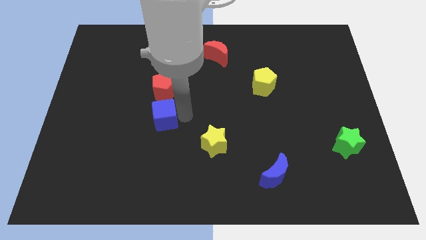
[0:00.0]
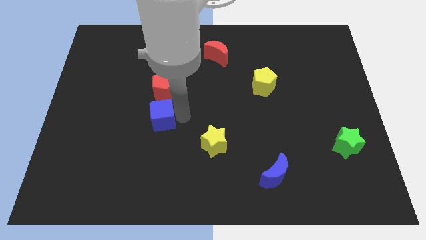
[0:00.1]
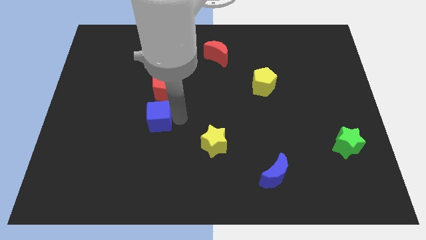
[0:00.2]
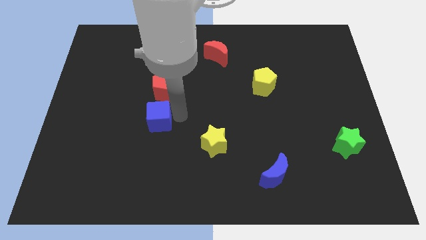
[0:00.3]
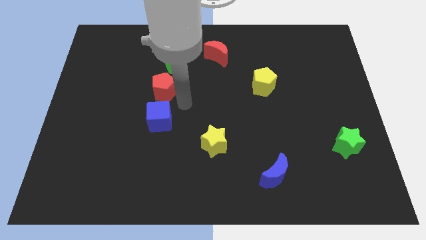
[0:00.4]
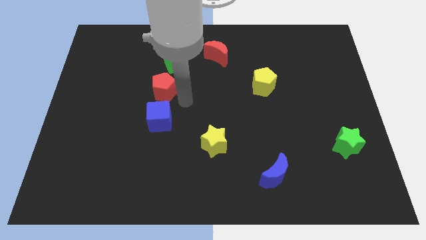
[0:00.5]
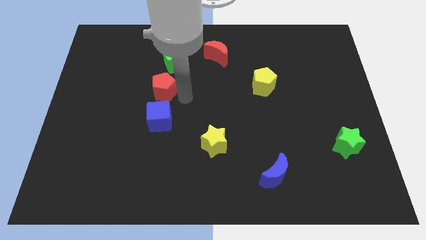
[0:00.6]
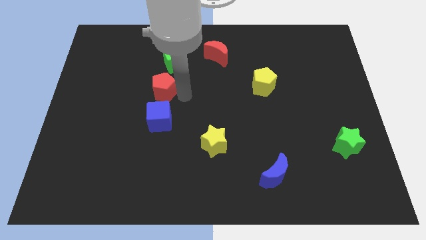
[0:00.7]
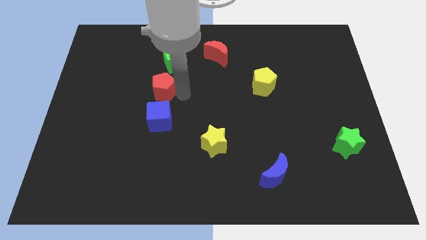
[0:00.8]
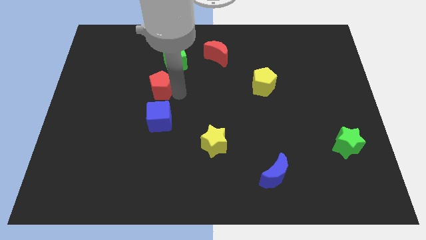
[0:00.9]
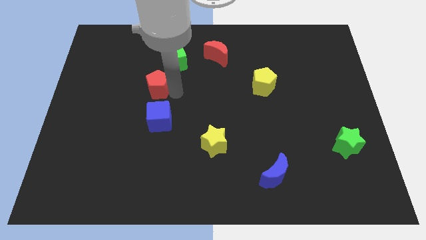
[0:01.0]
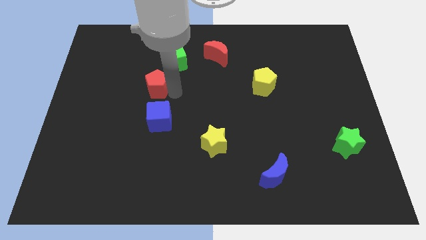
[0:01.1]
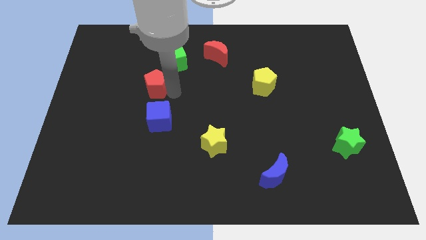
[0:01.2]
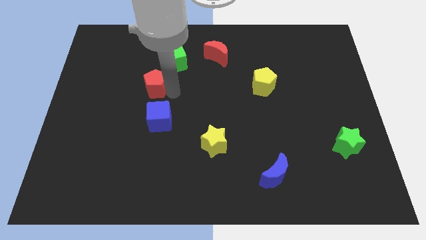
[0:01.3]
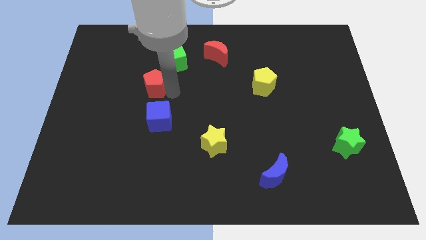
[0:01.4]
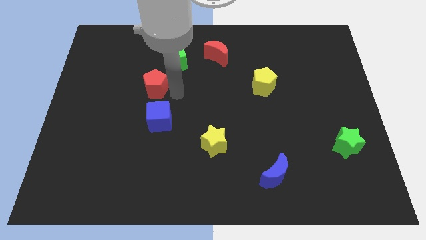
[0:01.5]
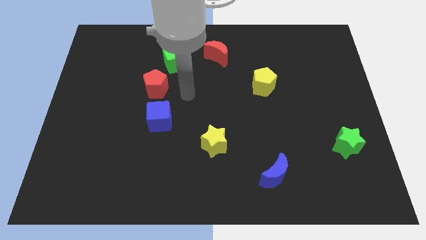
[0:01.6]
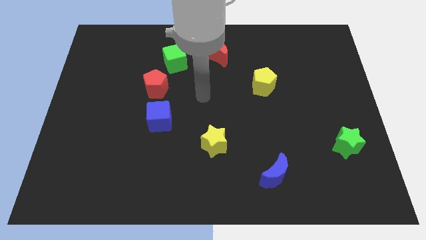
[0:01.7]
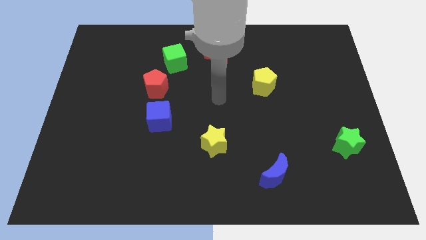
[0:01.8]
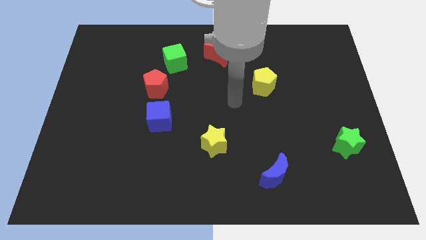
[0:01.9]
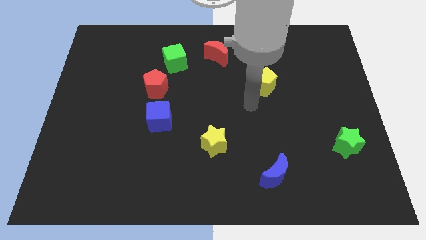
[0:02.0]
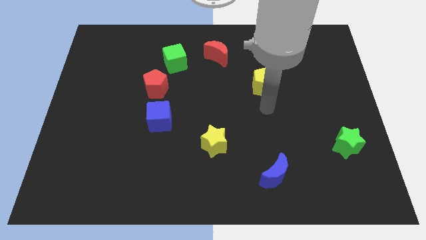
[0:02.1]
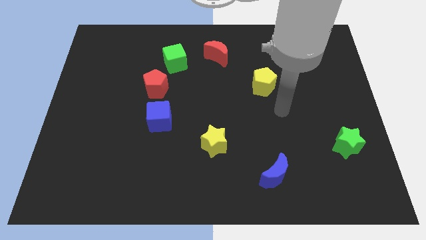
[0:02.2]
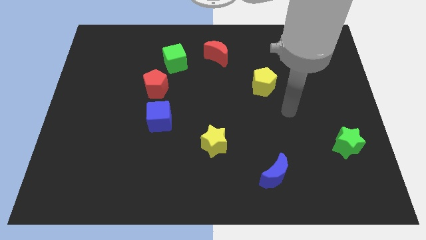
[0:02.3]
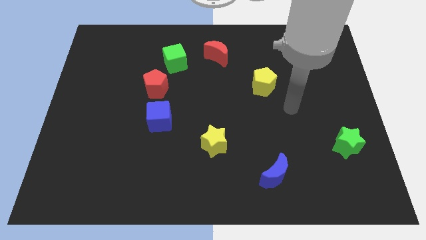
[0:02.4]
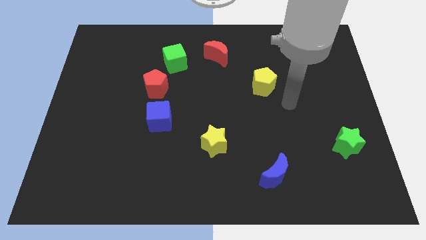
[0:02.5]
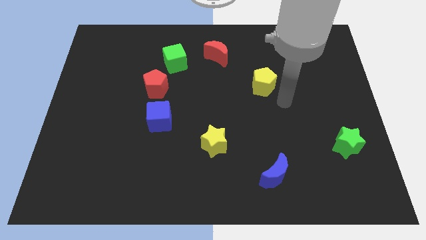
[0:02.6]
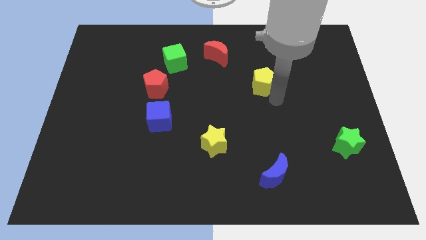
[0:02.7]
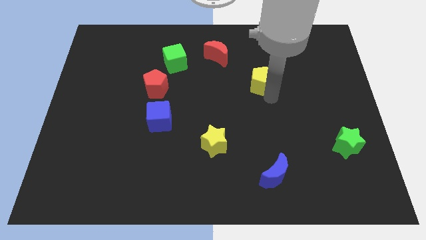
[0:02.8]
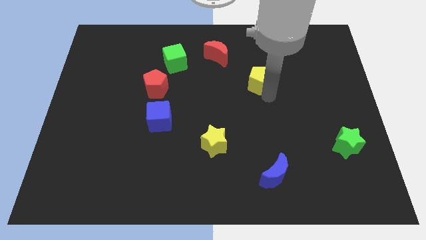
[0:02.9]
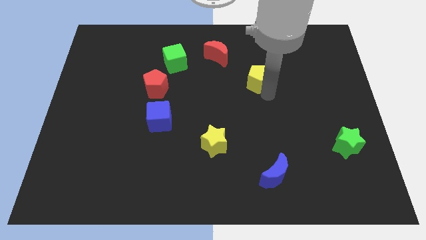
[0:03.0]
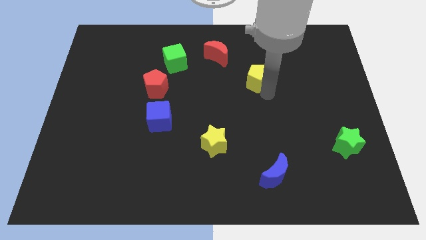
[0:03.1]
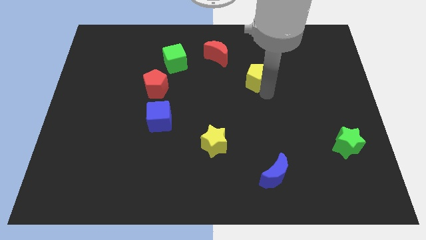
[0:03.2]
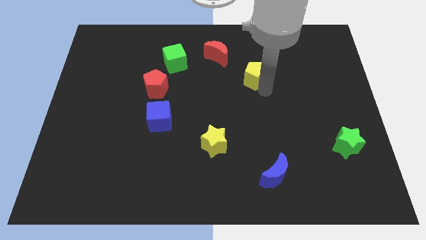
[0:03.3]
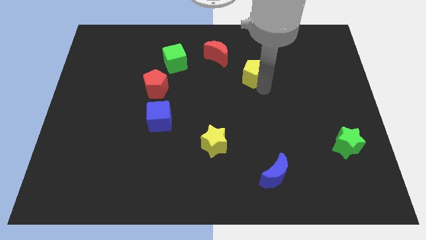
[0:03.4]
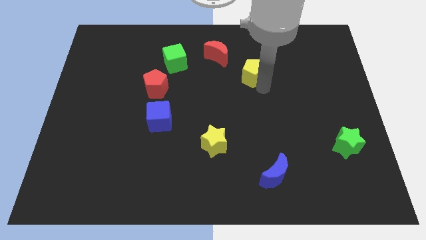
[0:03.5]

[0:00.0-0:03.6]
push the yellow pentagon towards the bottom of the red moon

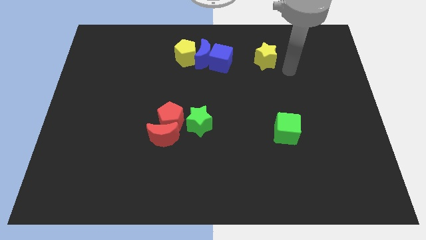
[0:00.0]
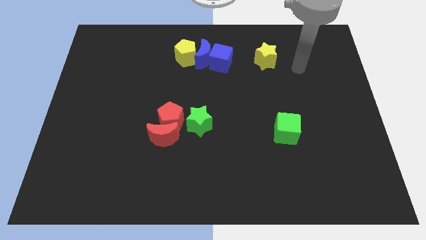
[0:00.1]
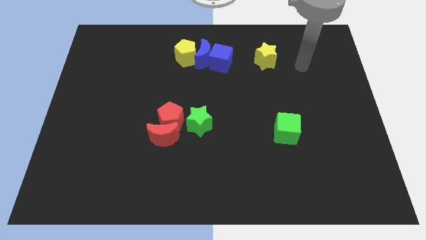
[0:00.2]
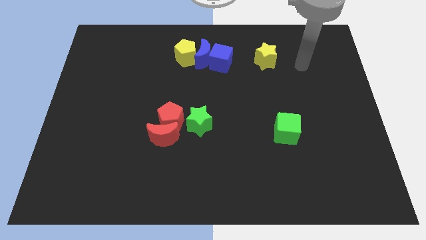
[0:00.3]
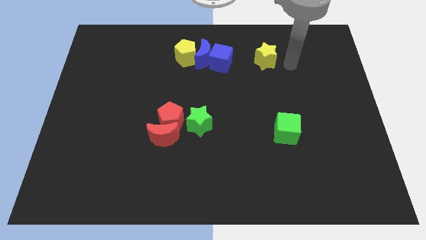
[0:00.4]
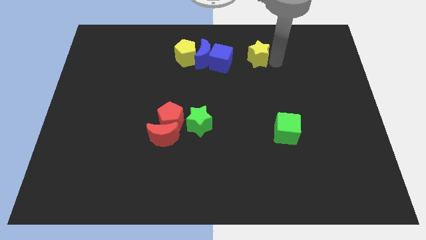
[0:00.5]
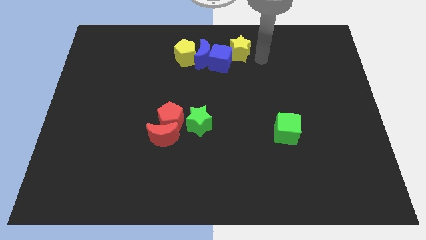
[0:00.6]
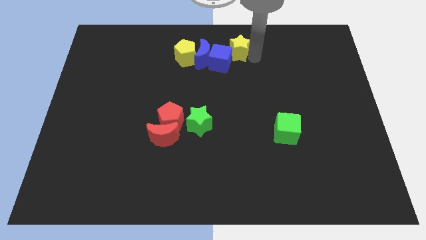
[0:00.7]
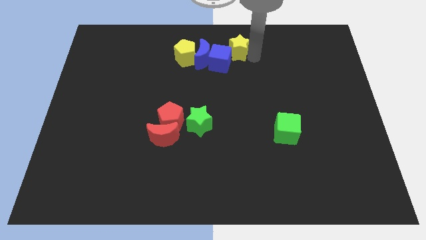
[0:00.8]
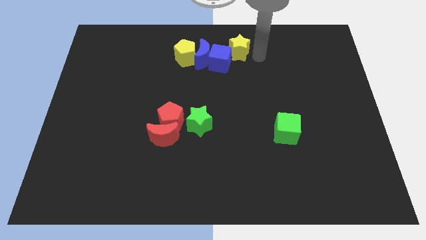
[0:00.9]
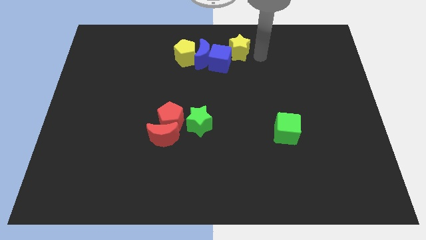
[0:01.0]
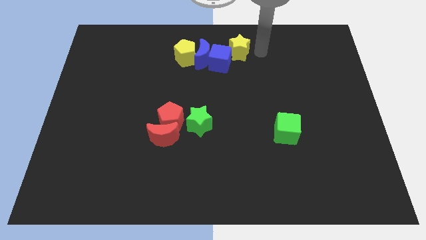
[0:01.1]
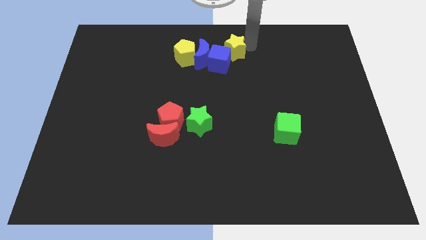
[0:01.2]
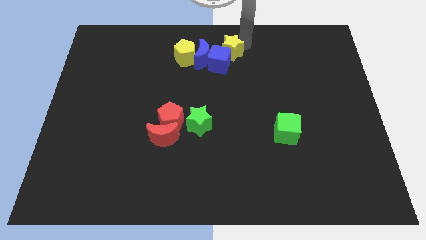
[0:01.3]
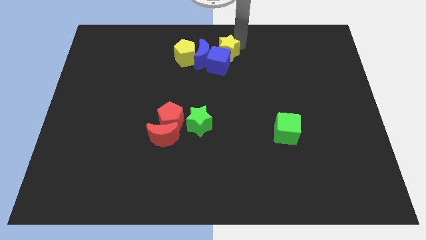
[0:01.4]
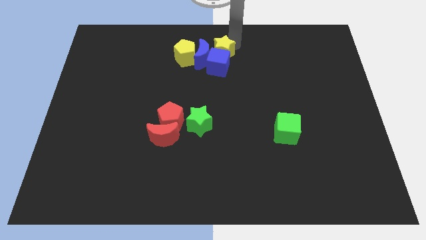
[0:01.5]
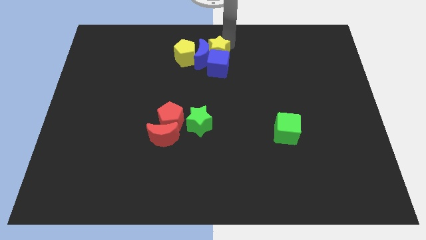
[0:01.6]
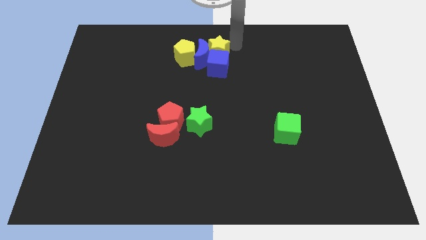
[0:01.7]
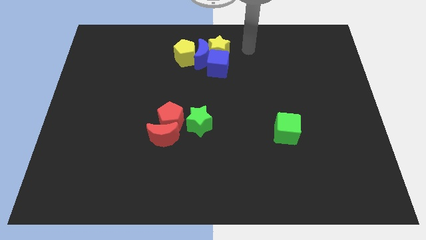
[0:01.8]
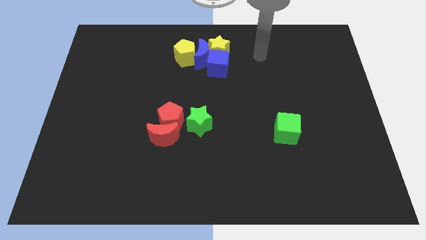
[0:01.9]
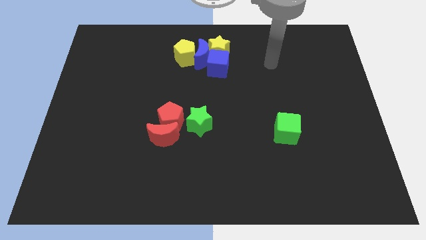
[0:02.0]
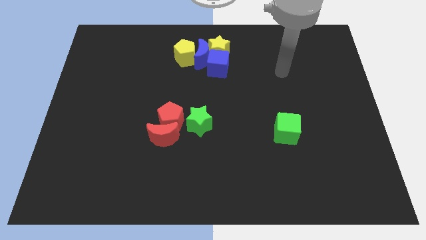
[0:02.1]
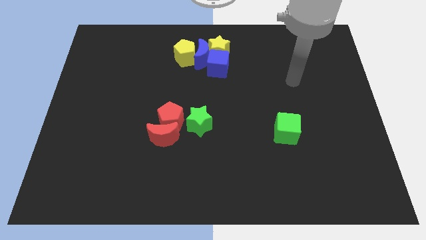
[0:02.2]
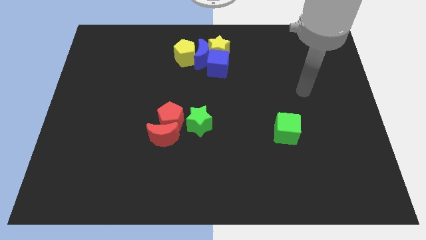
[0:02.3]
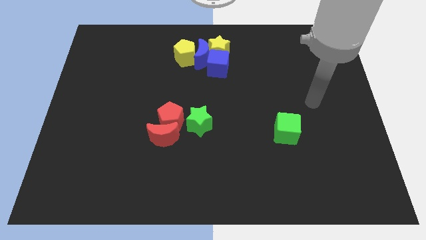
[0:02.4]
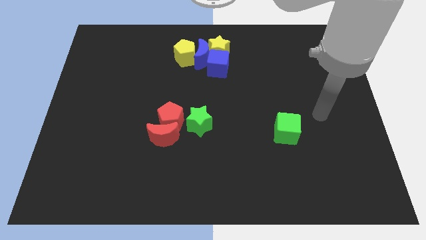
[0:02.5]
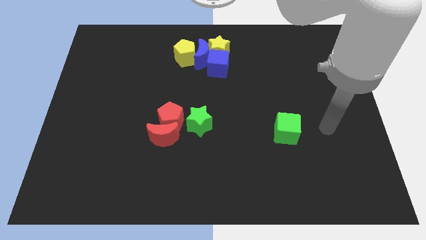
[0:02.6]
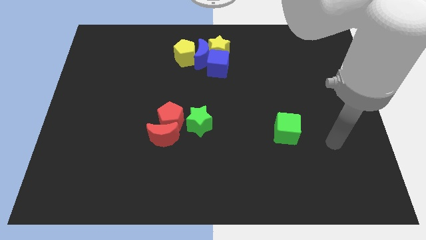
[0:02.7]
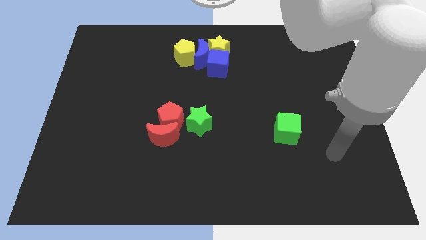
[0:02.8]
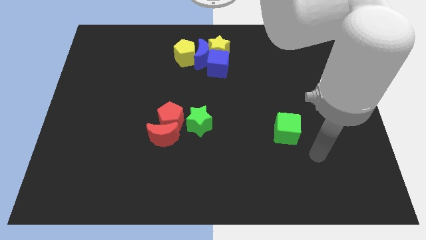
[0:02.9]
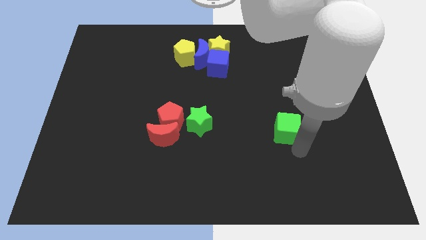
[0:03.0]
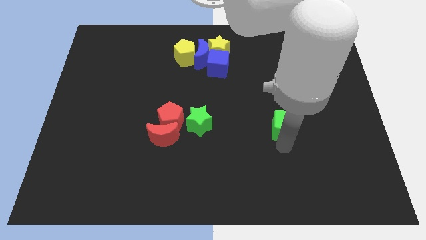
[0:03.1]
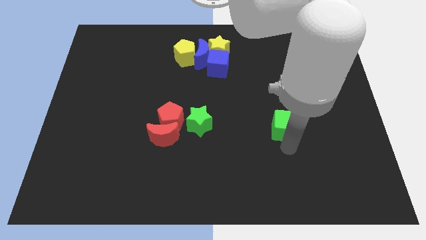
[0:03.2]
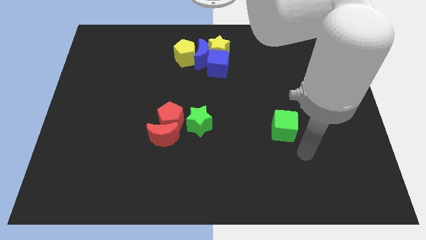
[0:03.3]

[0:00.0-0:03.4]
push the yellow star into the blue blocks

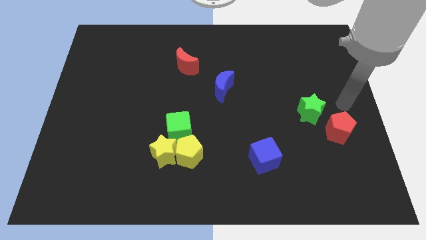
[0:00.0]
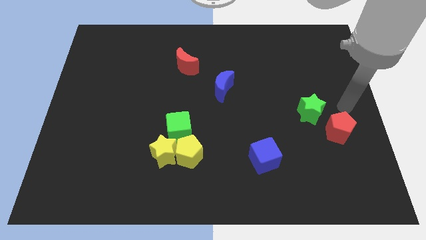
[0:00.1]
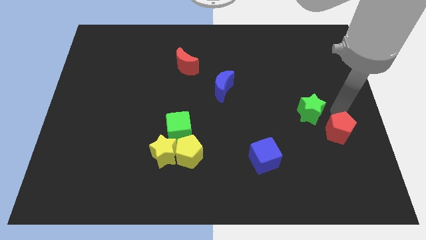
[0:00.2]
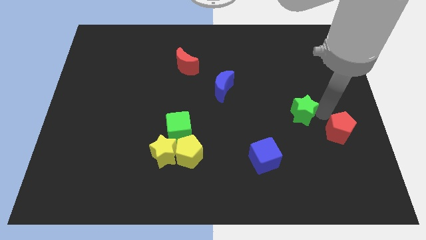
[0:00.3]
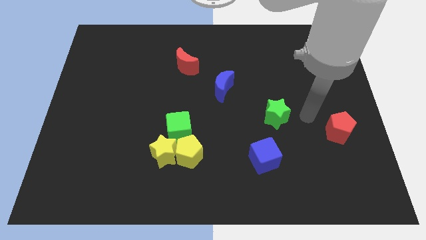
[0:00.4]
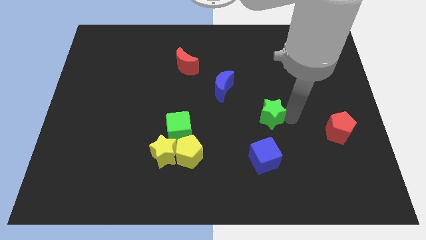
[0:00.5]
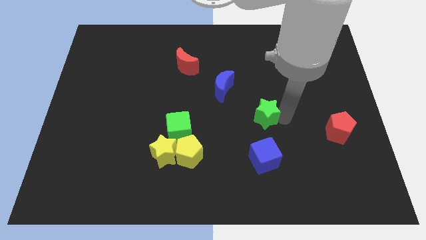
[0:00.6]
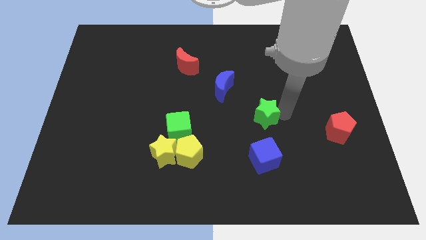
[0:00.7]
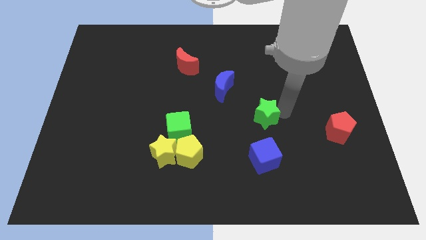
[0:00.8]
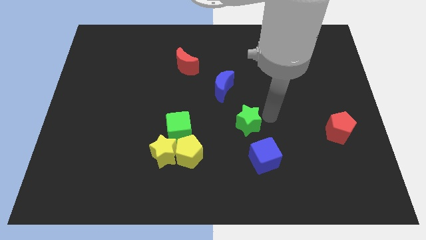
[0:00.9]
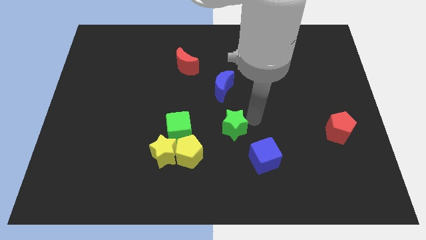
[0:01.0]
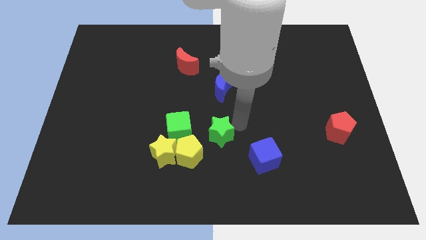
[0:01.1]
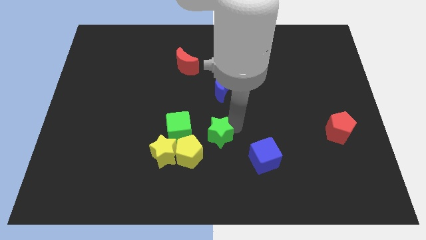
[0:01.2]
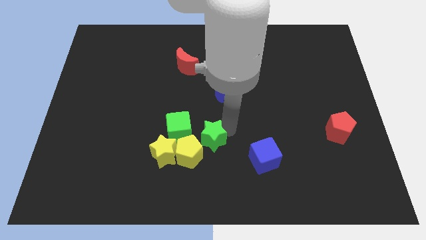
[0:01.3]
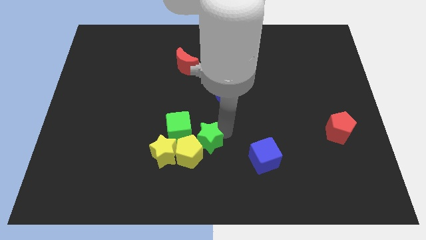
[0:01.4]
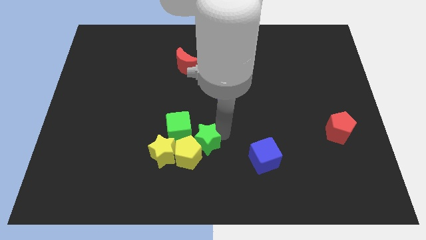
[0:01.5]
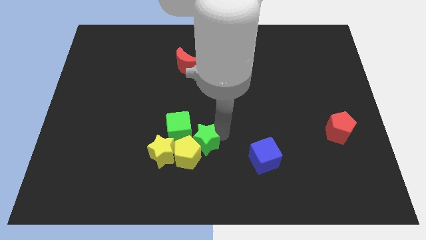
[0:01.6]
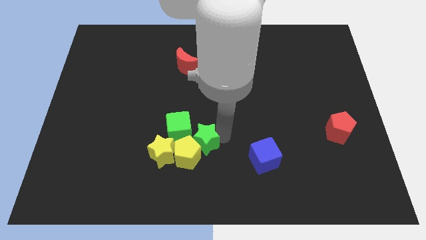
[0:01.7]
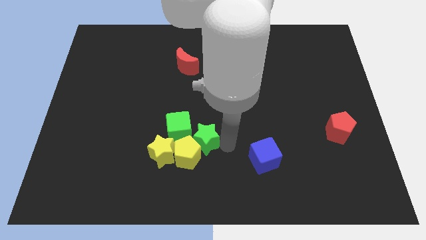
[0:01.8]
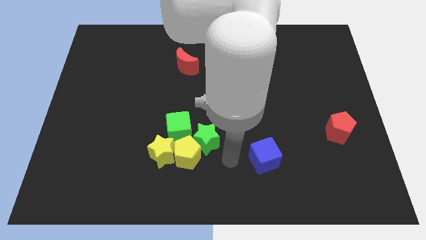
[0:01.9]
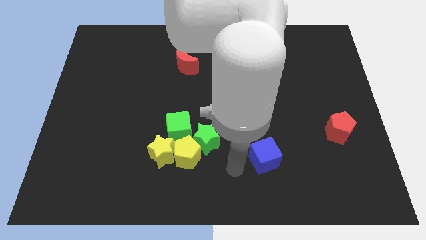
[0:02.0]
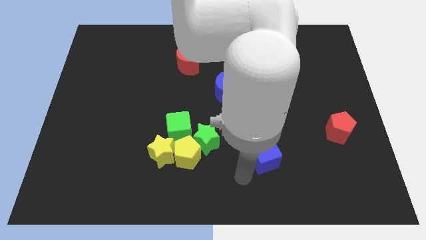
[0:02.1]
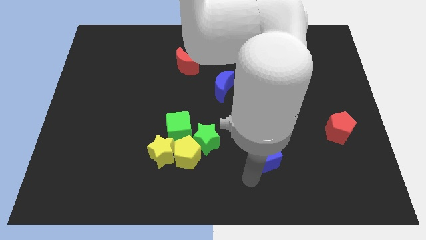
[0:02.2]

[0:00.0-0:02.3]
push green star in to yellow pentagon
